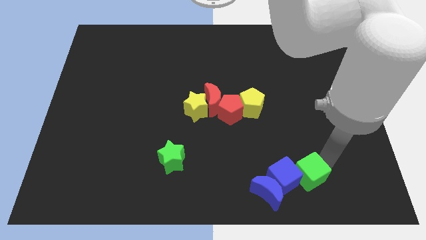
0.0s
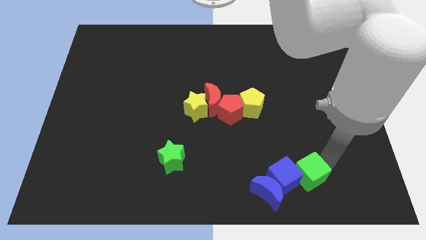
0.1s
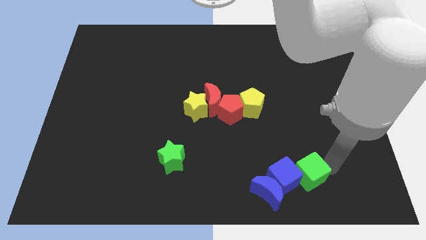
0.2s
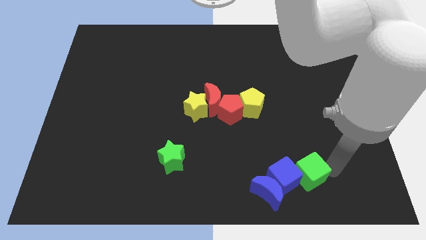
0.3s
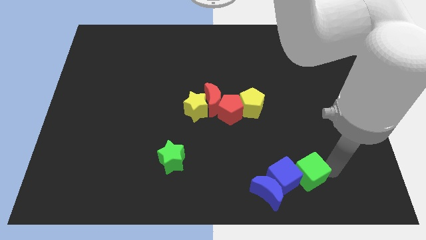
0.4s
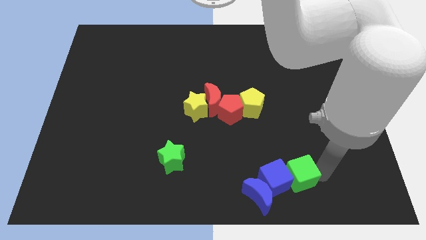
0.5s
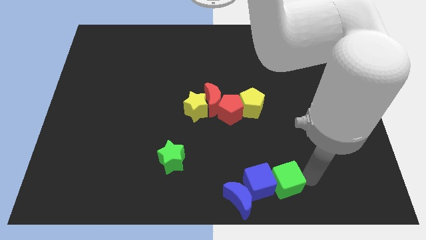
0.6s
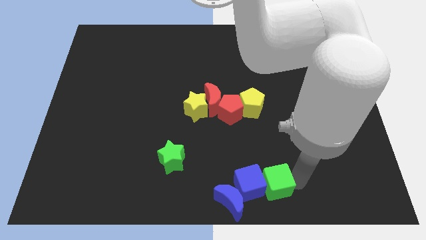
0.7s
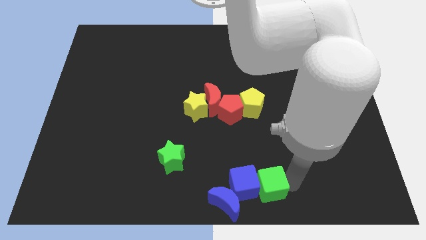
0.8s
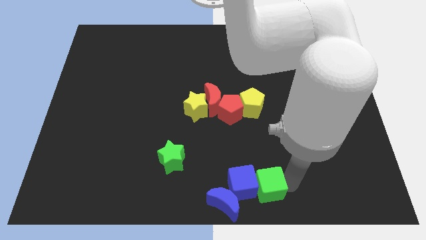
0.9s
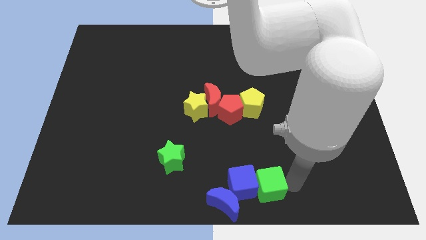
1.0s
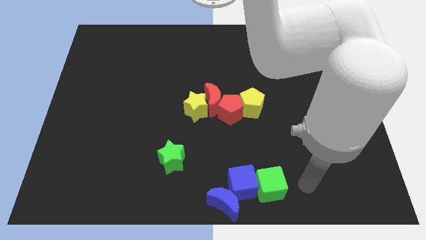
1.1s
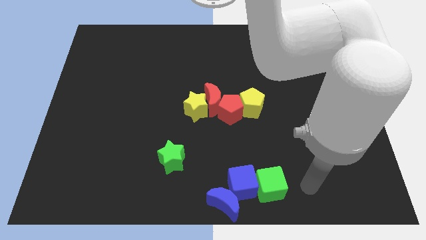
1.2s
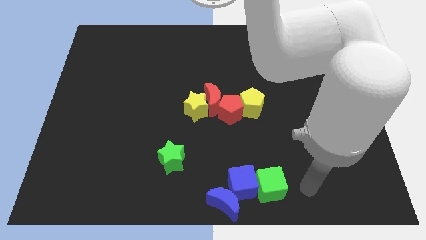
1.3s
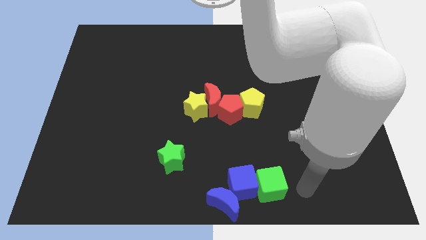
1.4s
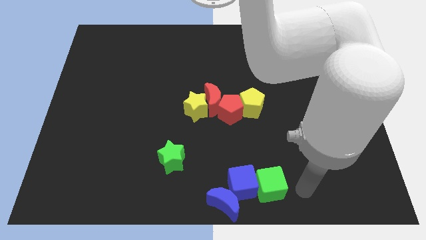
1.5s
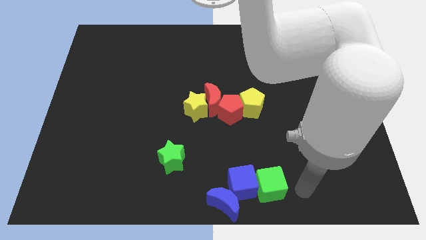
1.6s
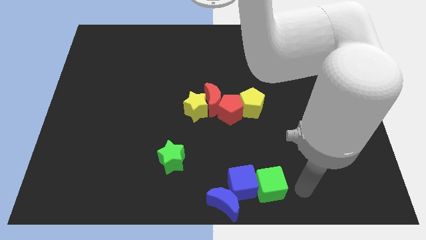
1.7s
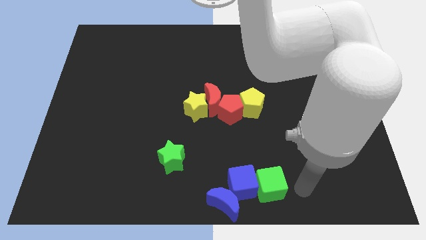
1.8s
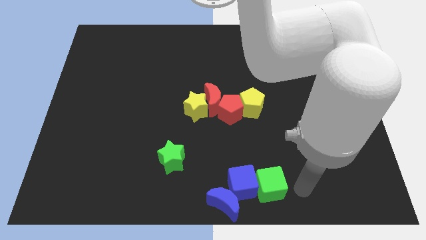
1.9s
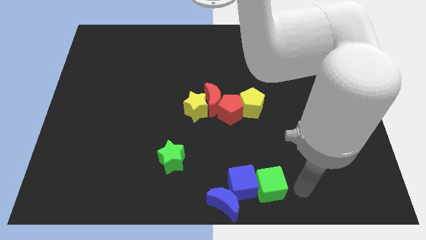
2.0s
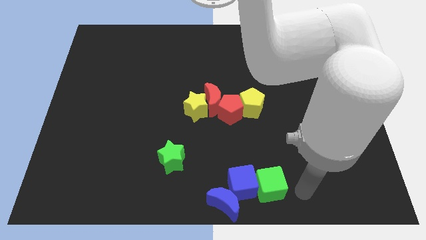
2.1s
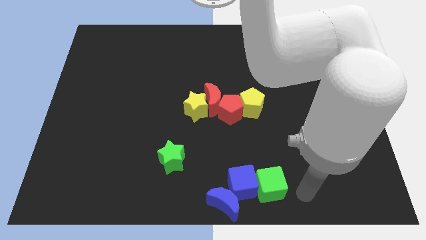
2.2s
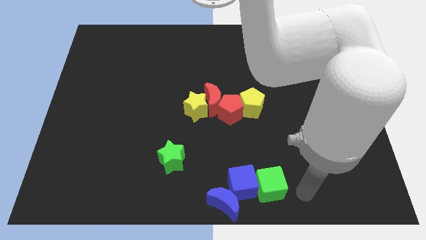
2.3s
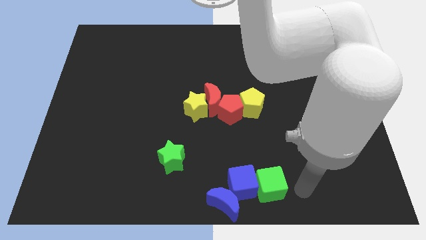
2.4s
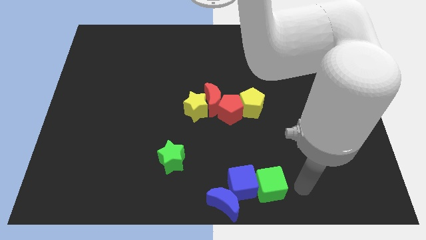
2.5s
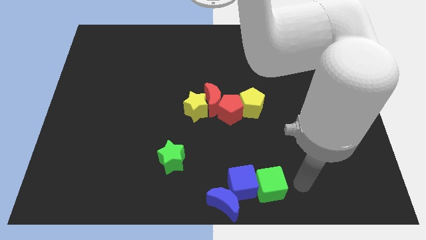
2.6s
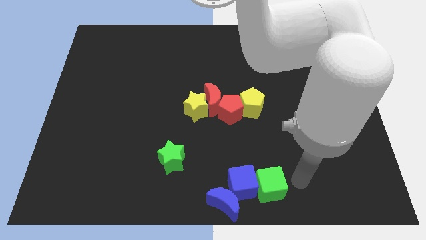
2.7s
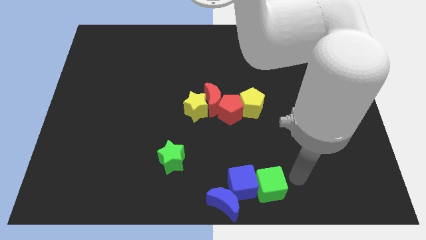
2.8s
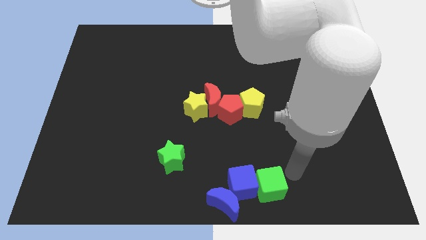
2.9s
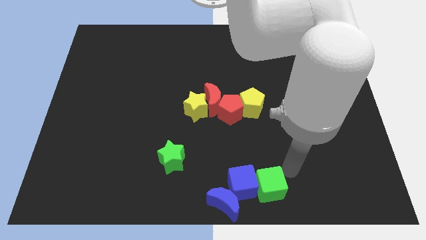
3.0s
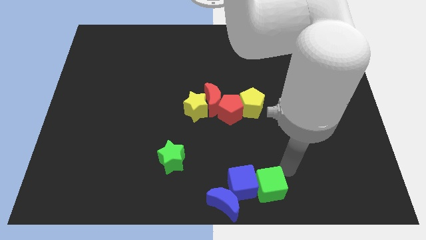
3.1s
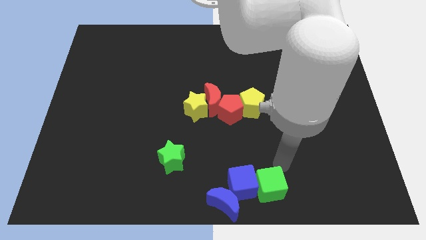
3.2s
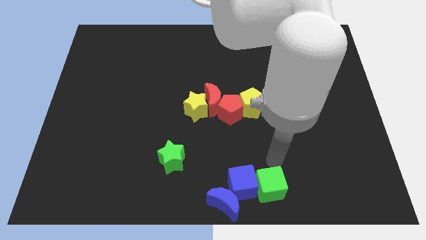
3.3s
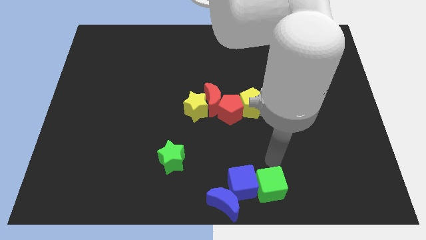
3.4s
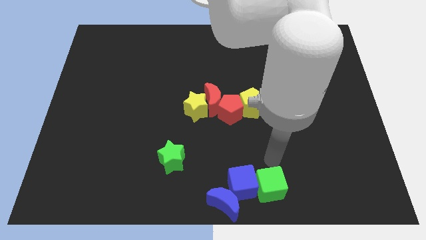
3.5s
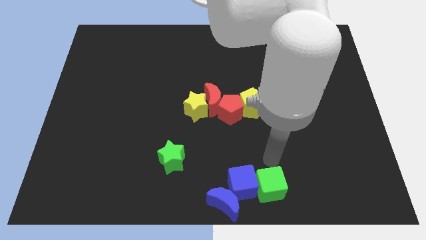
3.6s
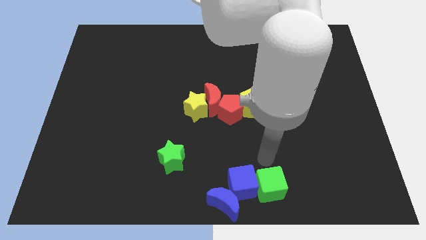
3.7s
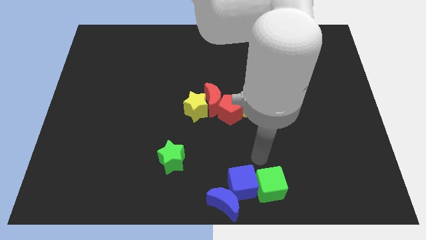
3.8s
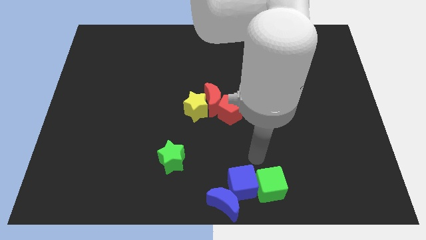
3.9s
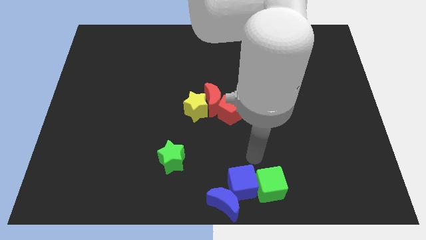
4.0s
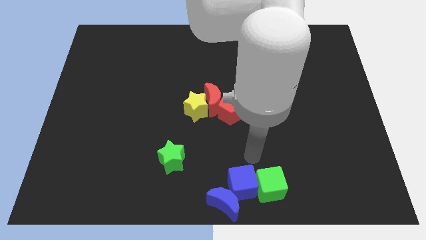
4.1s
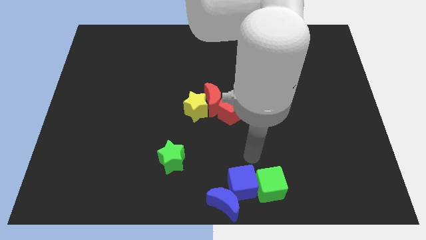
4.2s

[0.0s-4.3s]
move green cube along with blue blocks to the center

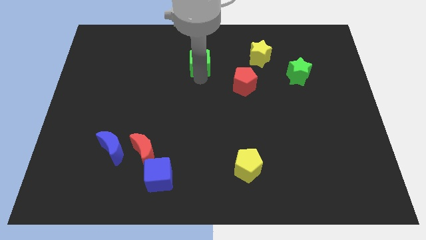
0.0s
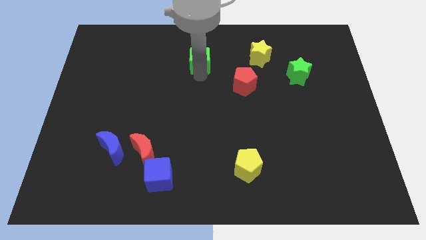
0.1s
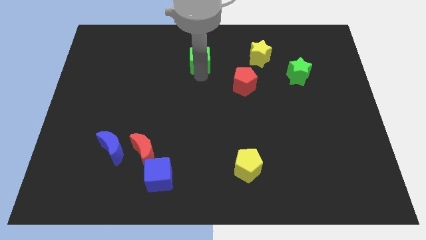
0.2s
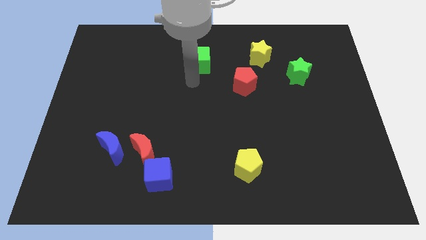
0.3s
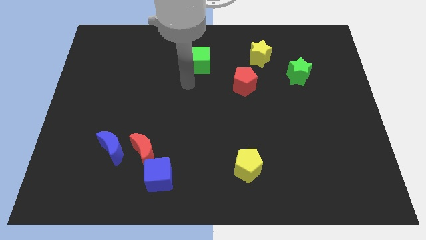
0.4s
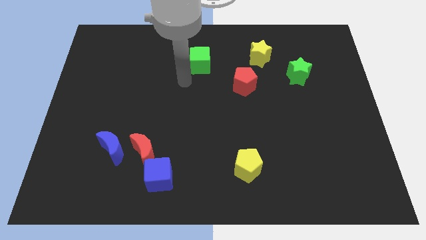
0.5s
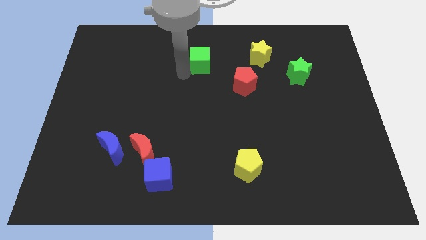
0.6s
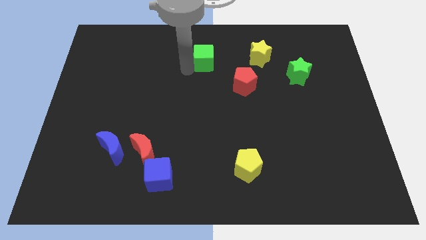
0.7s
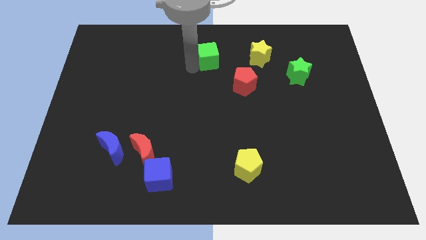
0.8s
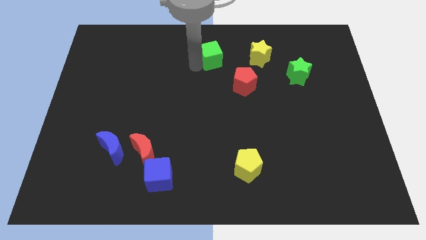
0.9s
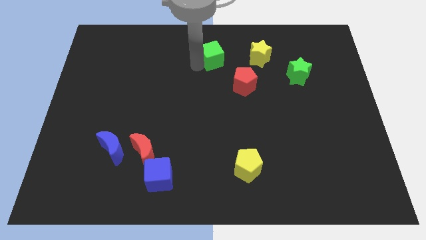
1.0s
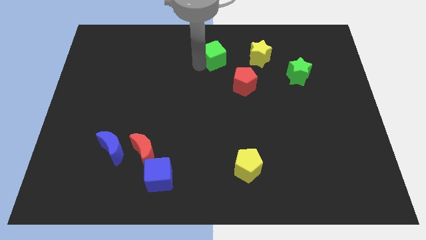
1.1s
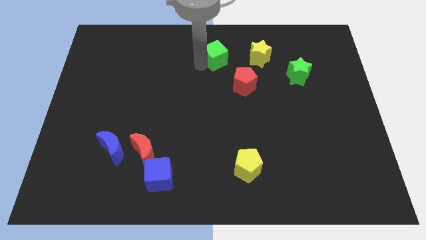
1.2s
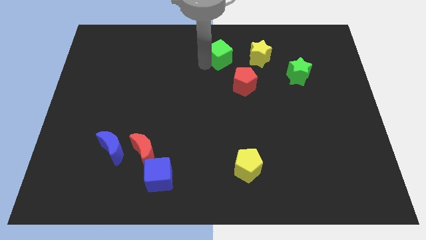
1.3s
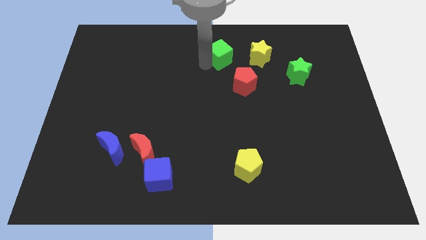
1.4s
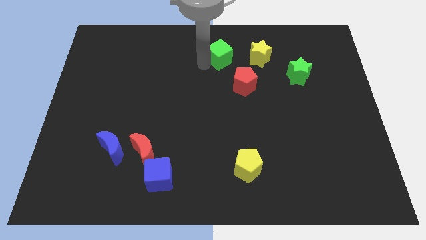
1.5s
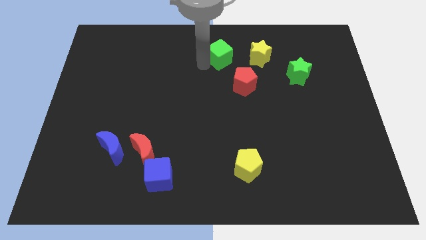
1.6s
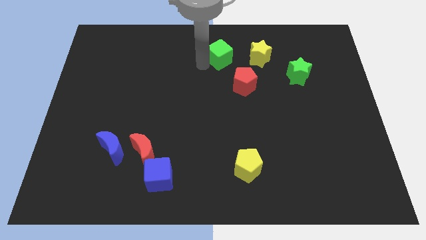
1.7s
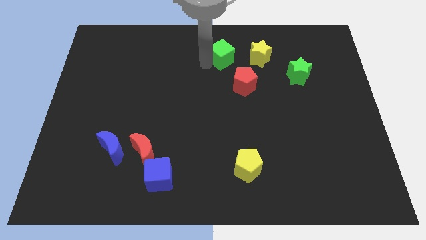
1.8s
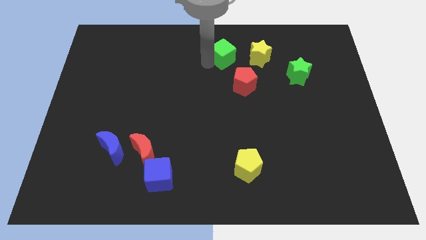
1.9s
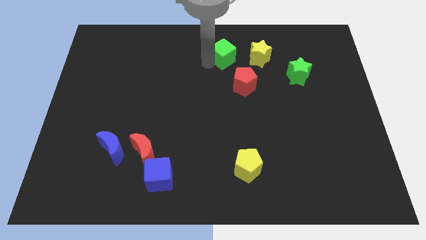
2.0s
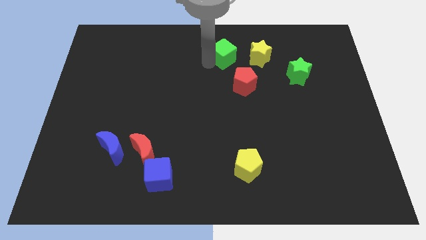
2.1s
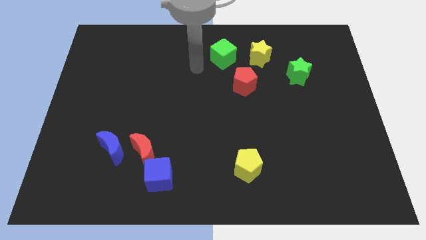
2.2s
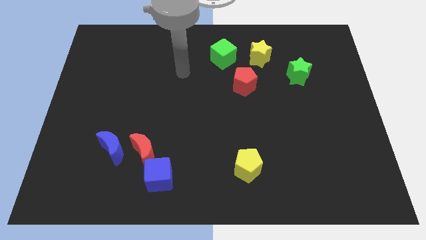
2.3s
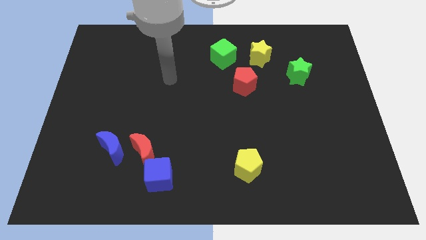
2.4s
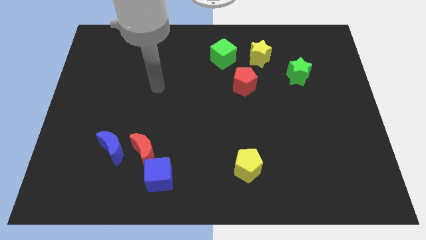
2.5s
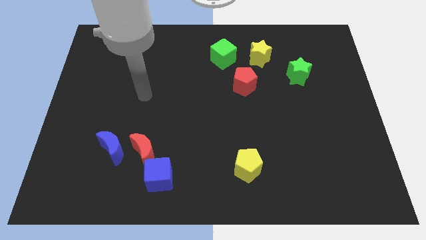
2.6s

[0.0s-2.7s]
move the green cube to the left of the yellow star

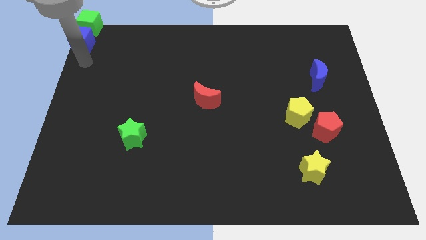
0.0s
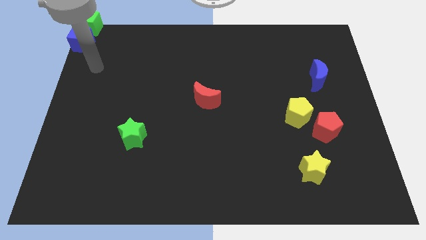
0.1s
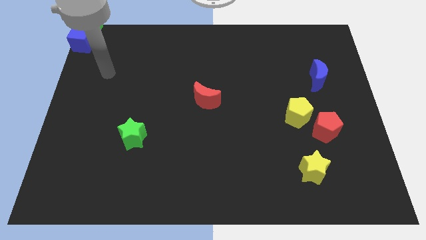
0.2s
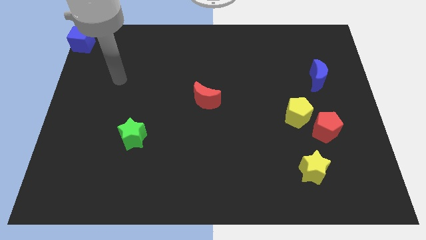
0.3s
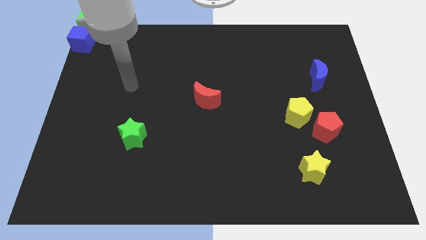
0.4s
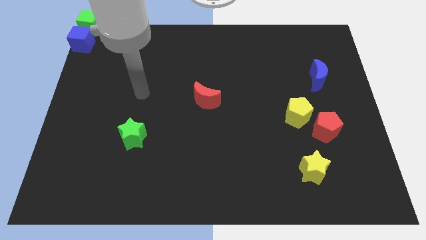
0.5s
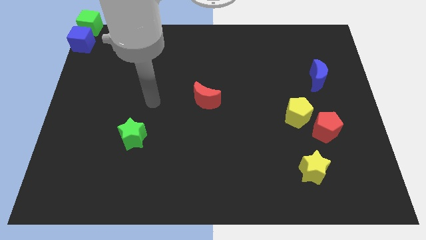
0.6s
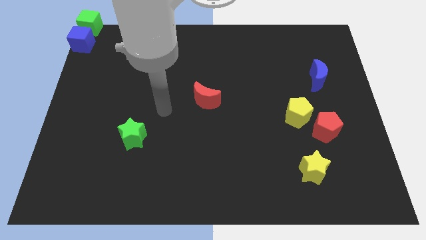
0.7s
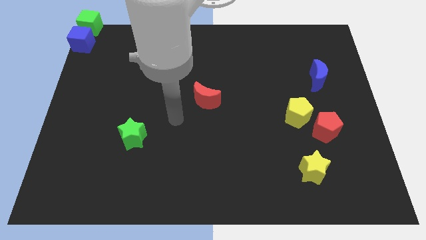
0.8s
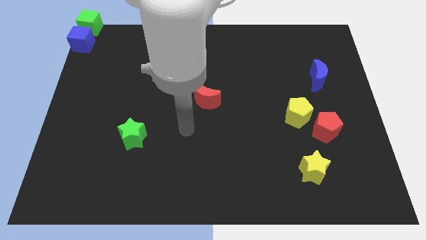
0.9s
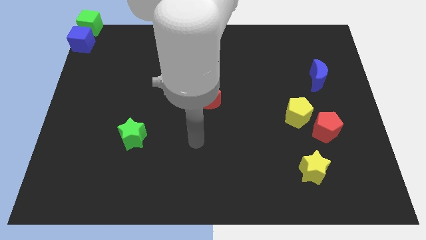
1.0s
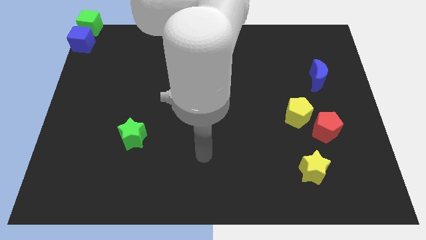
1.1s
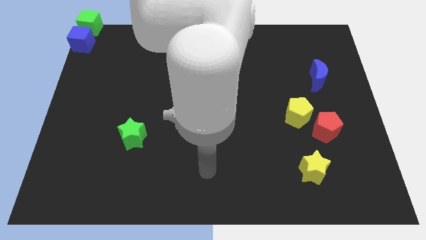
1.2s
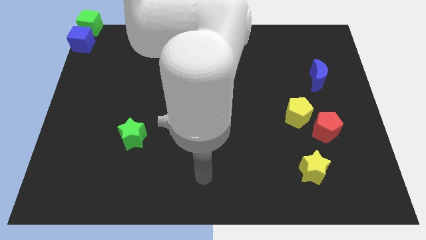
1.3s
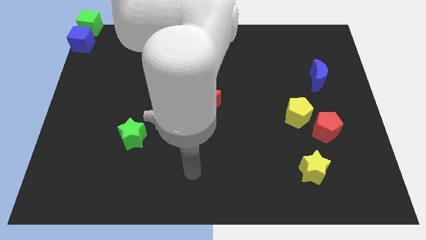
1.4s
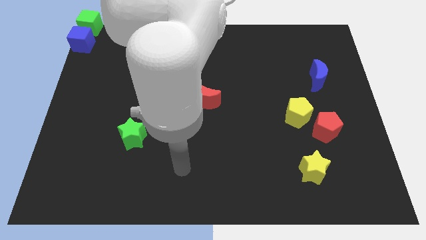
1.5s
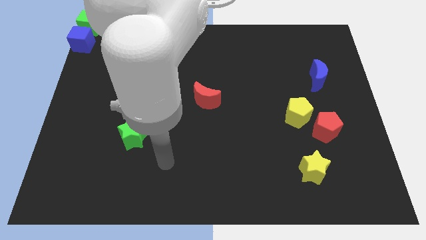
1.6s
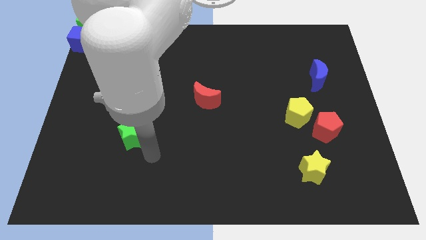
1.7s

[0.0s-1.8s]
point your arm diagonally to the green star

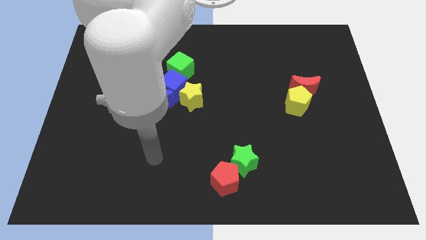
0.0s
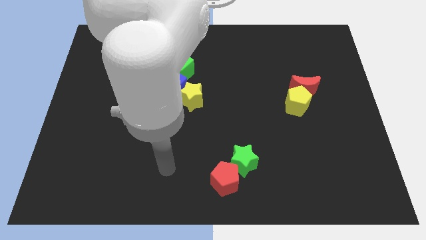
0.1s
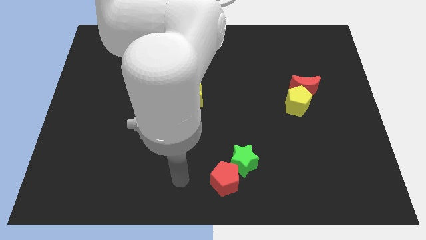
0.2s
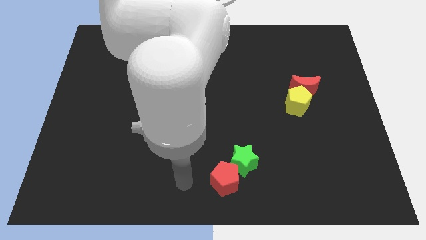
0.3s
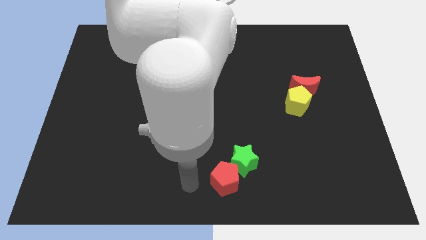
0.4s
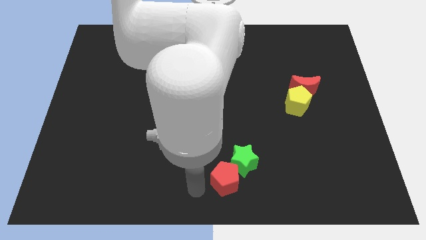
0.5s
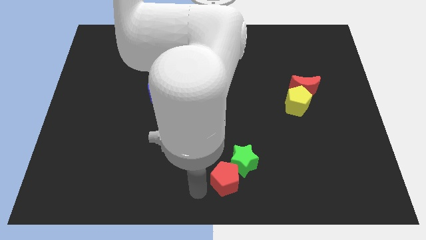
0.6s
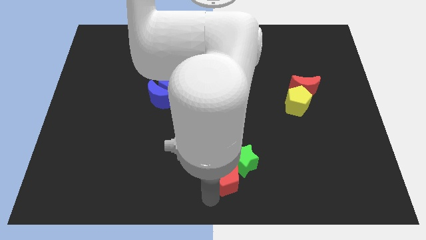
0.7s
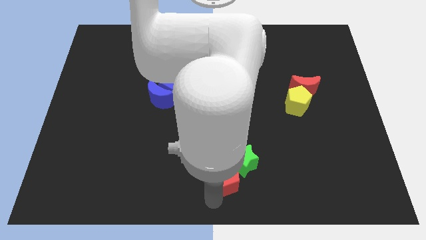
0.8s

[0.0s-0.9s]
tap on the bottom of the red pentagon
